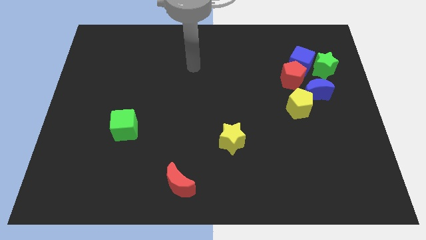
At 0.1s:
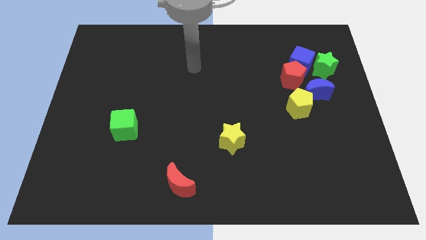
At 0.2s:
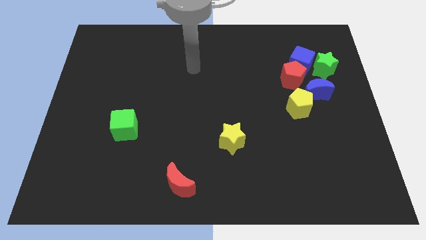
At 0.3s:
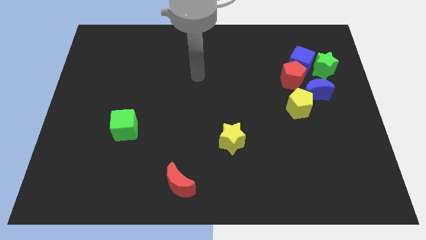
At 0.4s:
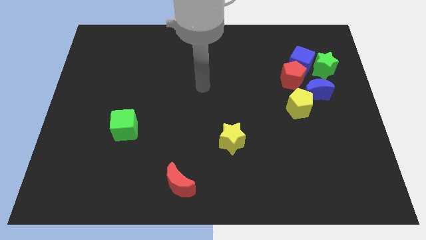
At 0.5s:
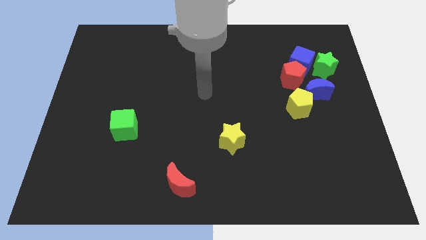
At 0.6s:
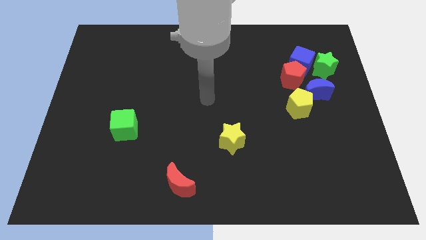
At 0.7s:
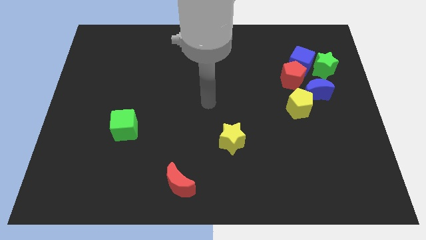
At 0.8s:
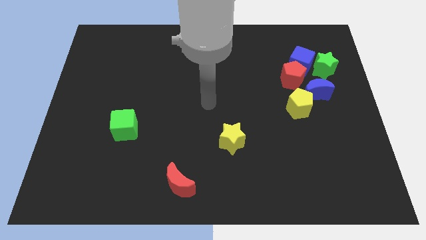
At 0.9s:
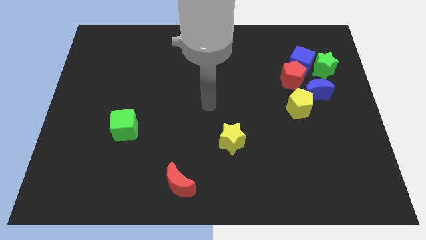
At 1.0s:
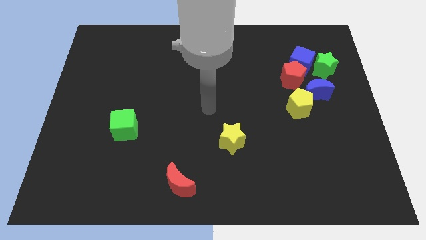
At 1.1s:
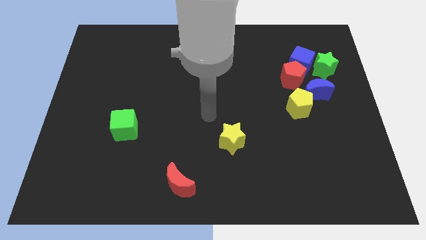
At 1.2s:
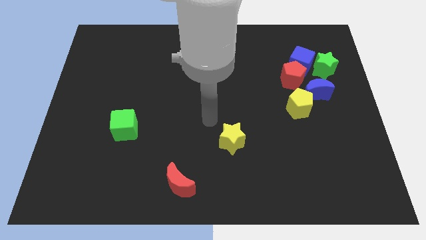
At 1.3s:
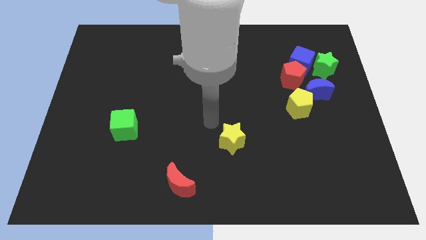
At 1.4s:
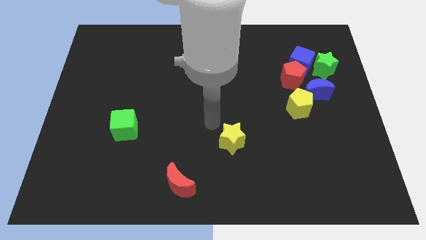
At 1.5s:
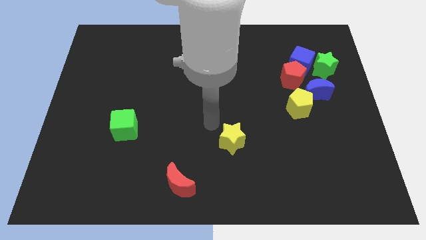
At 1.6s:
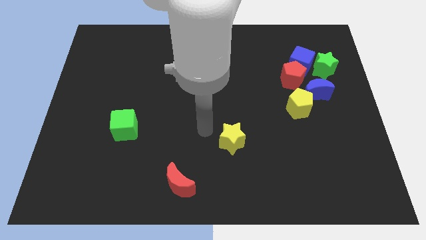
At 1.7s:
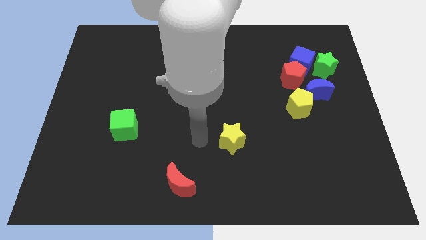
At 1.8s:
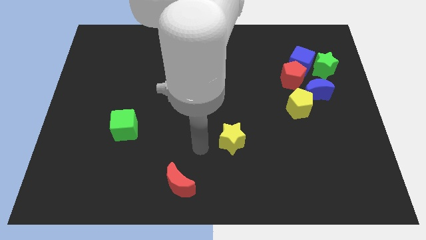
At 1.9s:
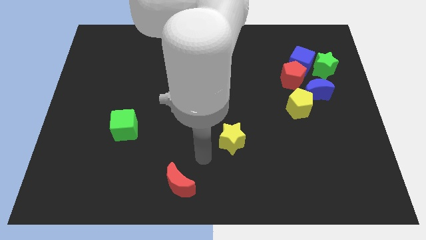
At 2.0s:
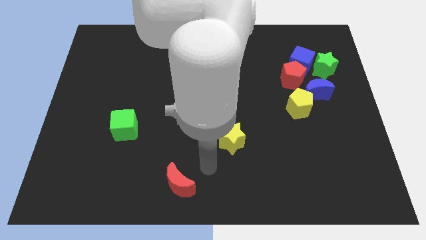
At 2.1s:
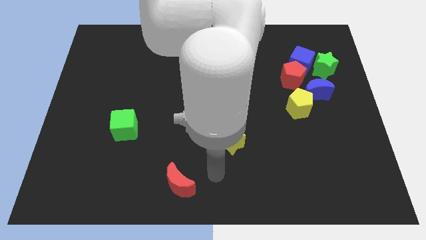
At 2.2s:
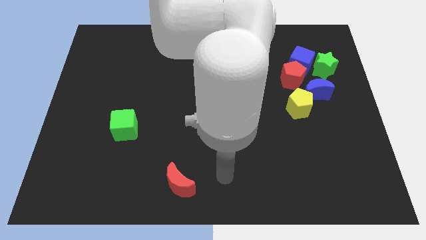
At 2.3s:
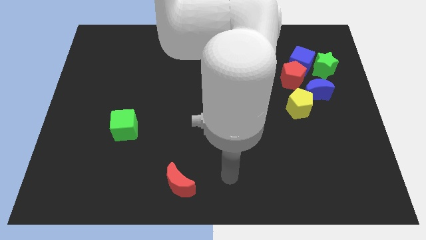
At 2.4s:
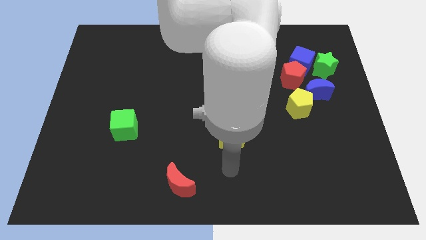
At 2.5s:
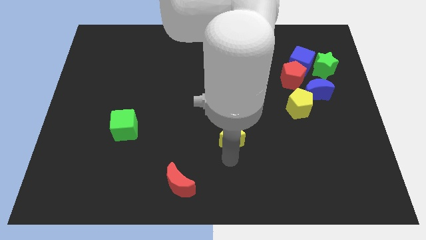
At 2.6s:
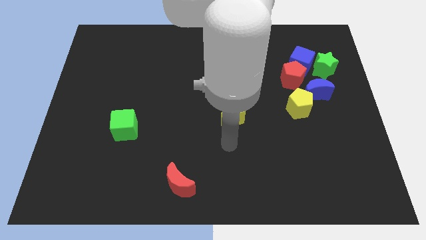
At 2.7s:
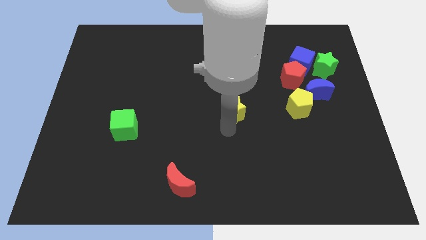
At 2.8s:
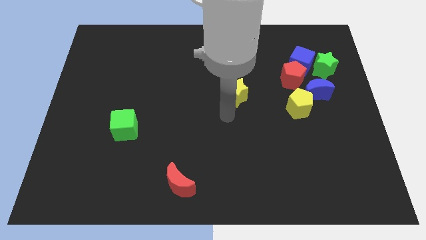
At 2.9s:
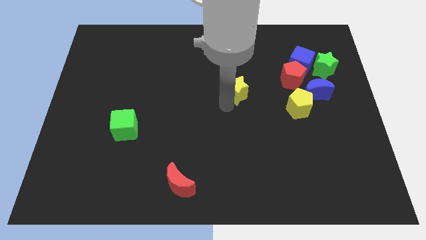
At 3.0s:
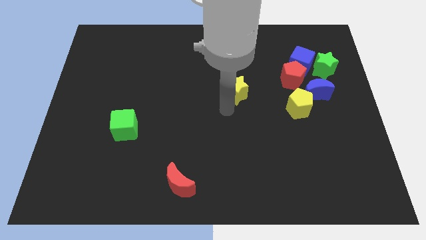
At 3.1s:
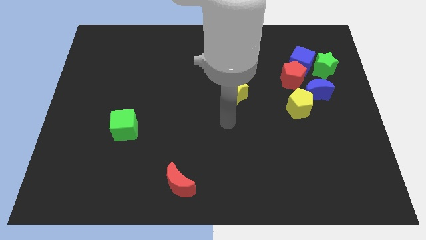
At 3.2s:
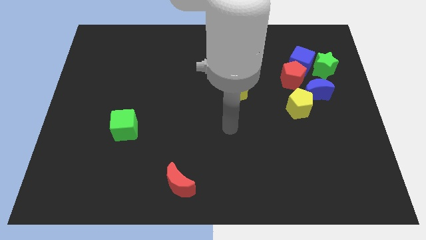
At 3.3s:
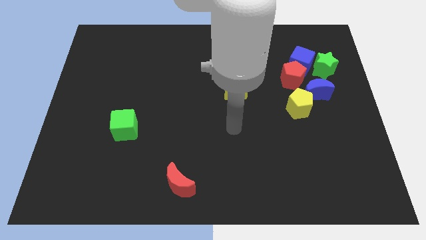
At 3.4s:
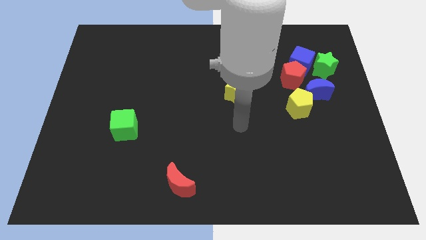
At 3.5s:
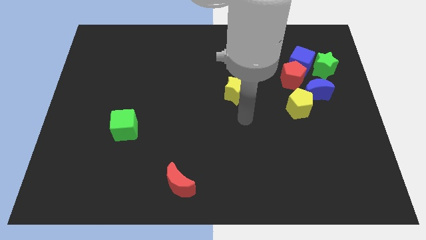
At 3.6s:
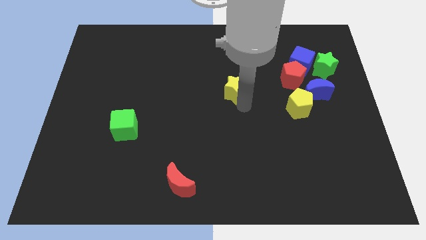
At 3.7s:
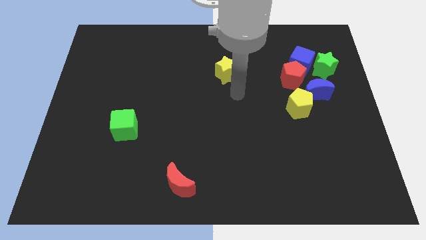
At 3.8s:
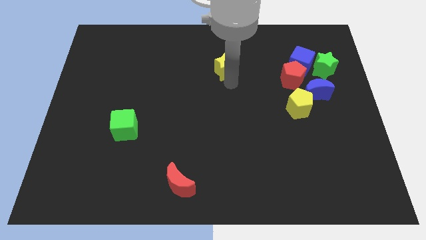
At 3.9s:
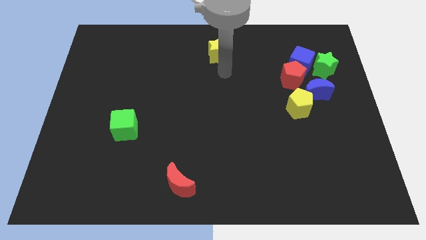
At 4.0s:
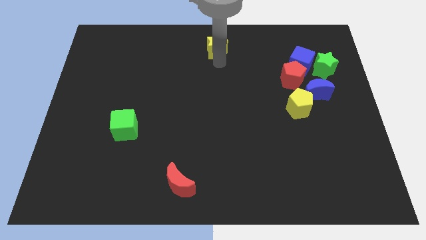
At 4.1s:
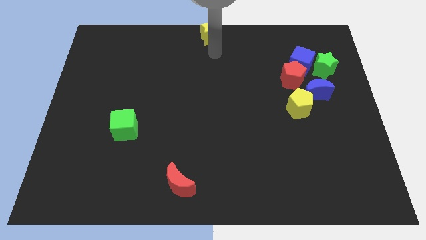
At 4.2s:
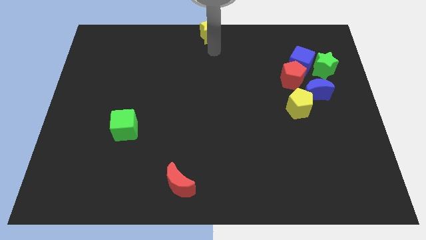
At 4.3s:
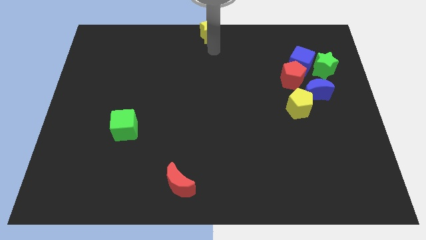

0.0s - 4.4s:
push the yellow star to the center top

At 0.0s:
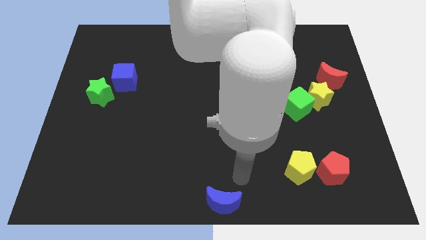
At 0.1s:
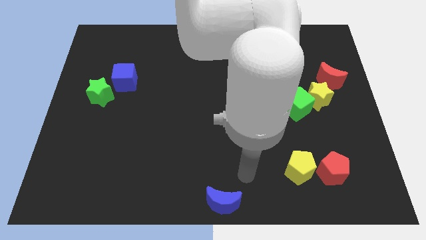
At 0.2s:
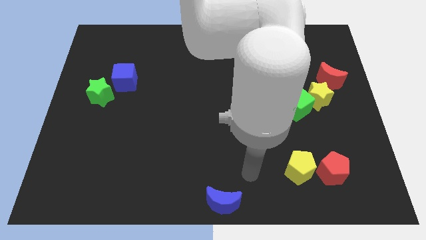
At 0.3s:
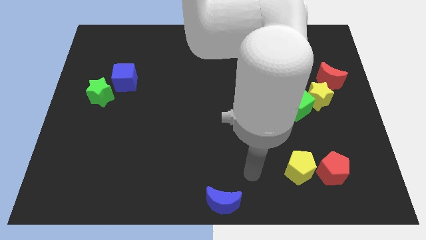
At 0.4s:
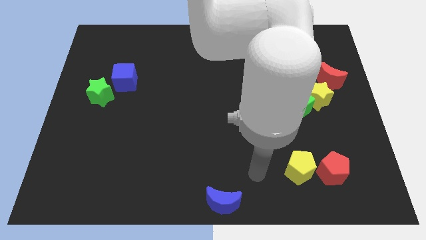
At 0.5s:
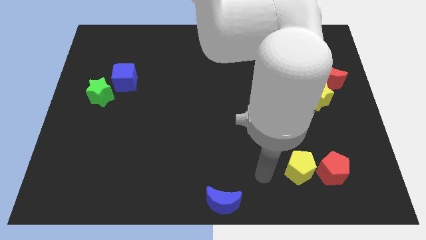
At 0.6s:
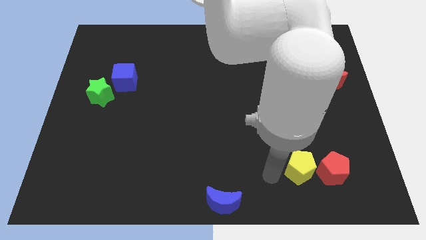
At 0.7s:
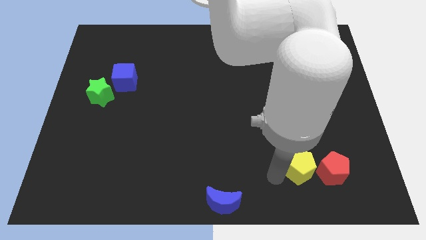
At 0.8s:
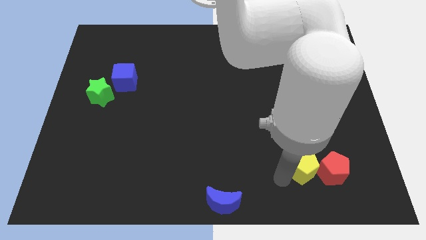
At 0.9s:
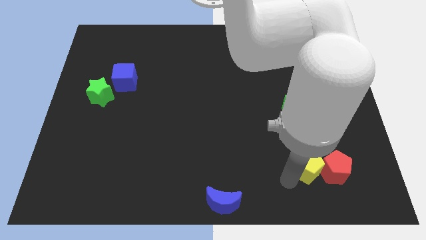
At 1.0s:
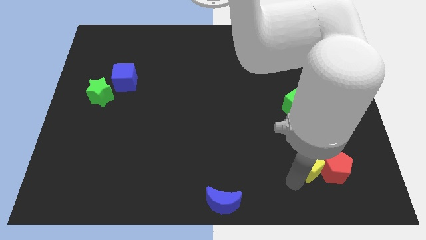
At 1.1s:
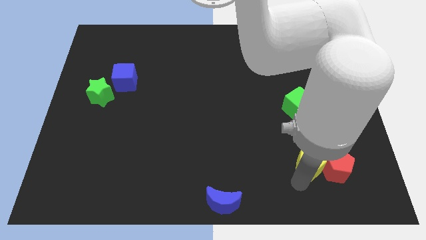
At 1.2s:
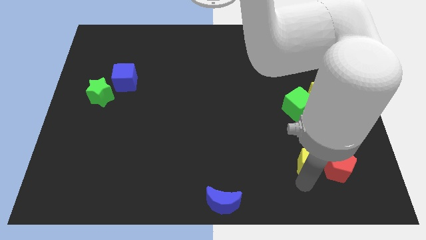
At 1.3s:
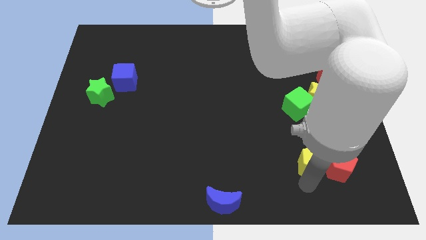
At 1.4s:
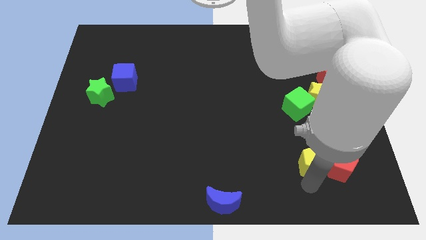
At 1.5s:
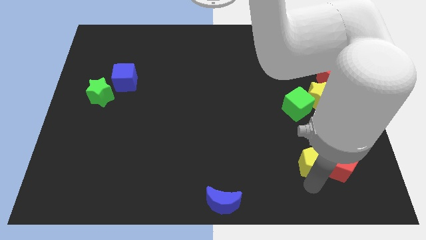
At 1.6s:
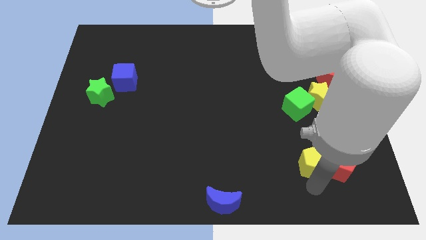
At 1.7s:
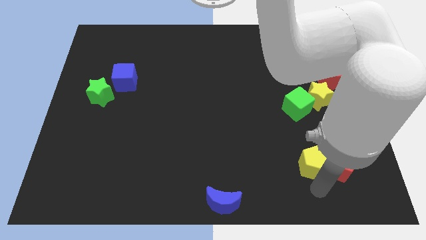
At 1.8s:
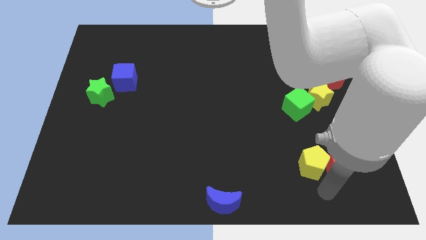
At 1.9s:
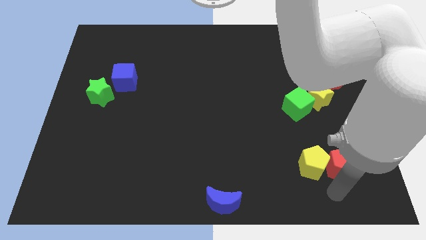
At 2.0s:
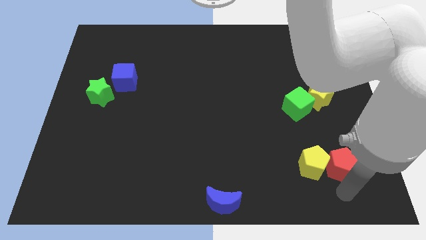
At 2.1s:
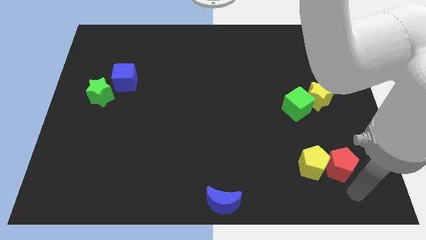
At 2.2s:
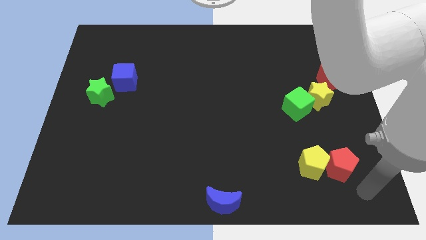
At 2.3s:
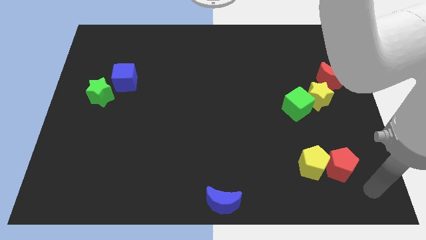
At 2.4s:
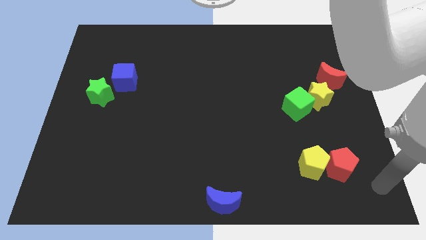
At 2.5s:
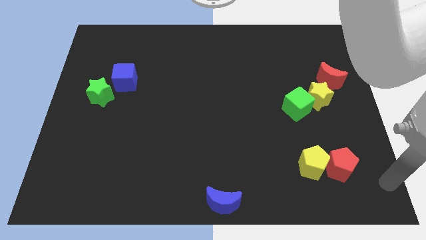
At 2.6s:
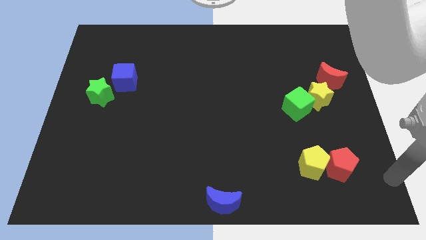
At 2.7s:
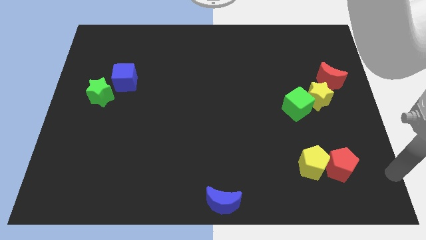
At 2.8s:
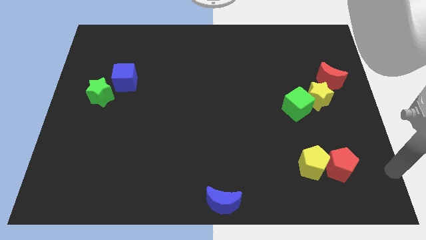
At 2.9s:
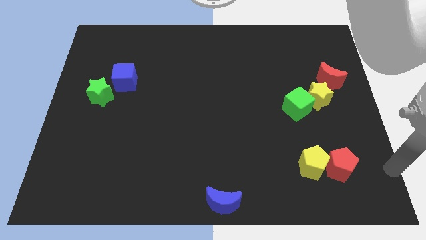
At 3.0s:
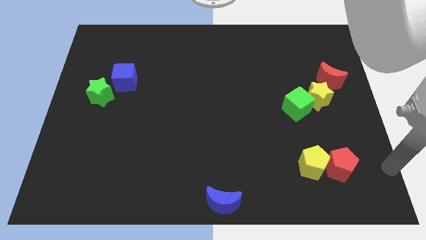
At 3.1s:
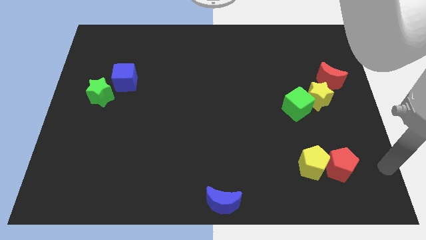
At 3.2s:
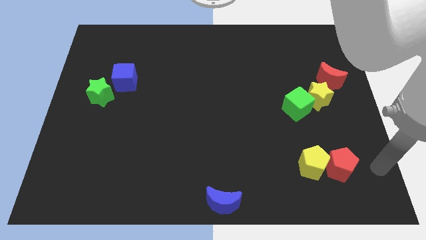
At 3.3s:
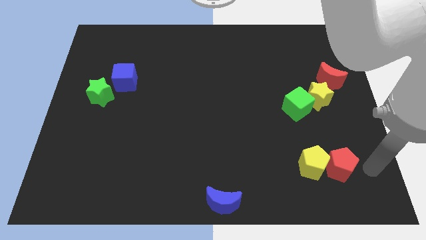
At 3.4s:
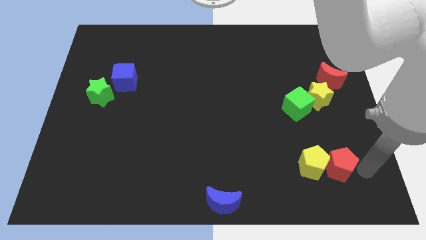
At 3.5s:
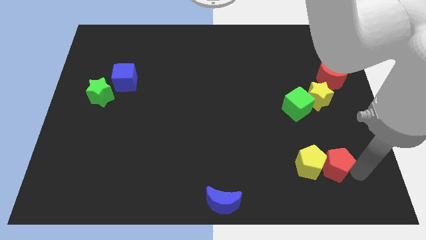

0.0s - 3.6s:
push red pentagon into yellow pentagon

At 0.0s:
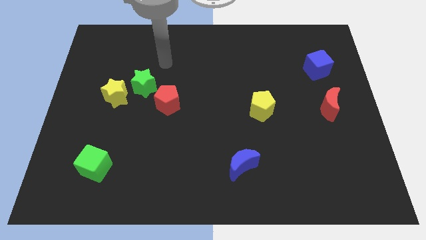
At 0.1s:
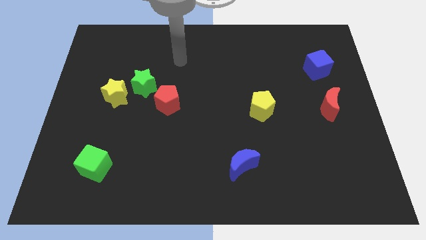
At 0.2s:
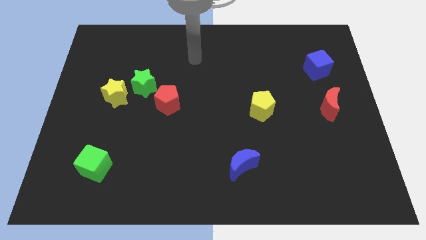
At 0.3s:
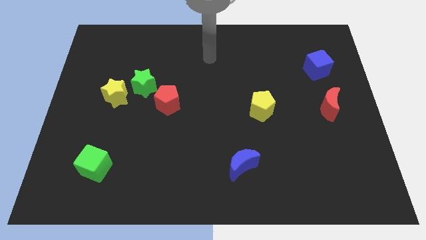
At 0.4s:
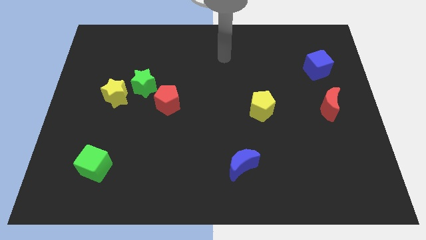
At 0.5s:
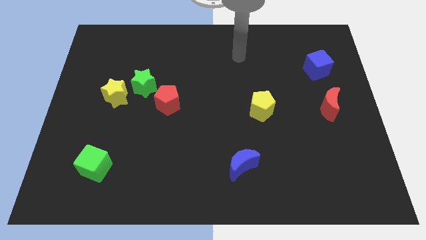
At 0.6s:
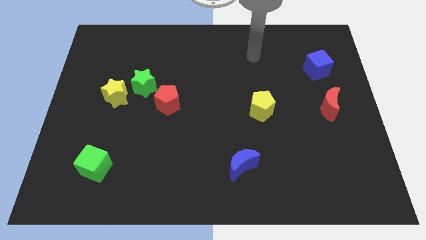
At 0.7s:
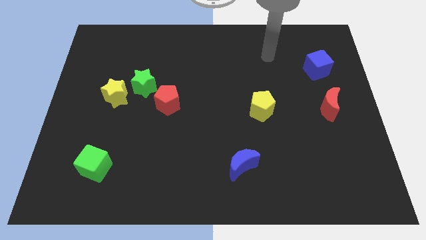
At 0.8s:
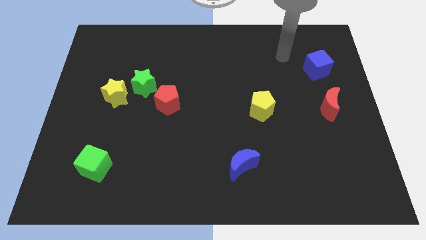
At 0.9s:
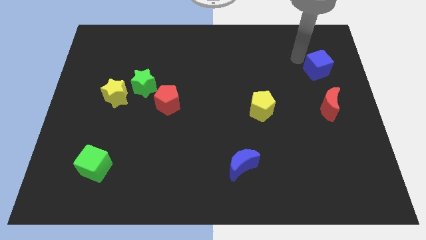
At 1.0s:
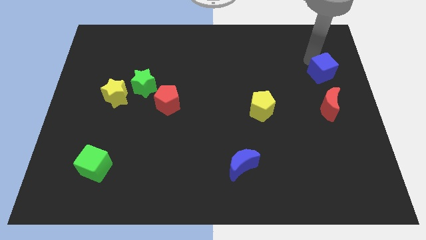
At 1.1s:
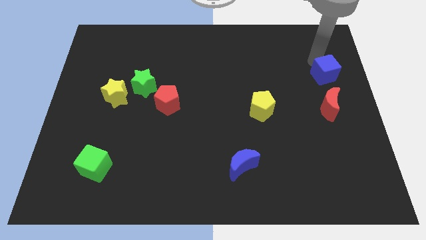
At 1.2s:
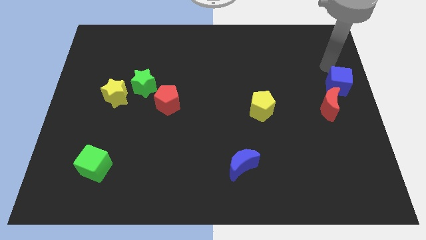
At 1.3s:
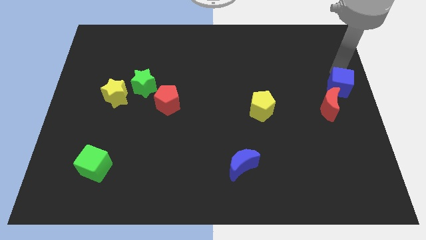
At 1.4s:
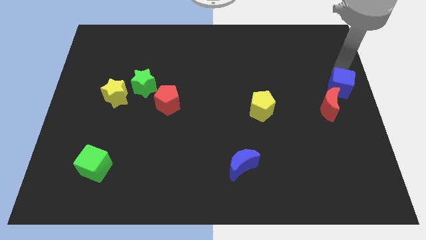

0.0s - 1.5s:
place the blue cube above the red crescent
